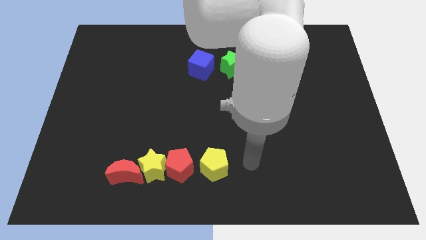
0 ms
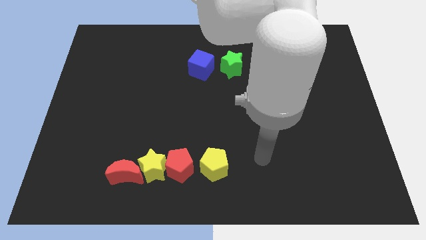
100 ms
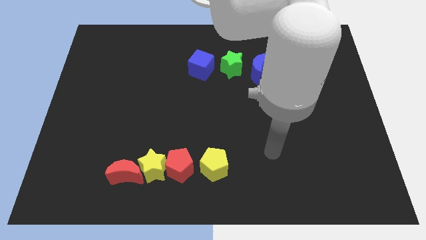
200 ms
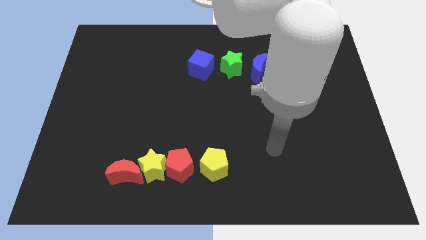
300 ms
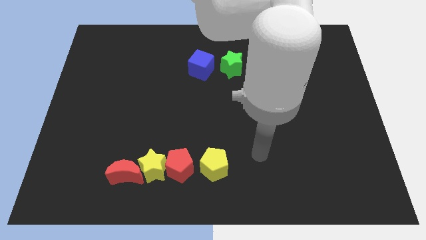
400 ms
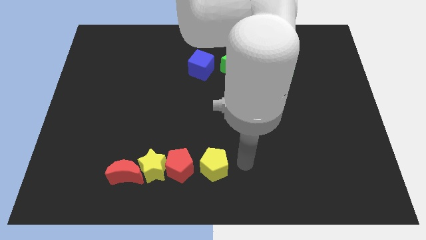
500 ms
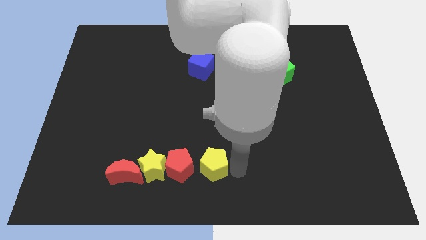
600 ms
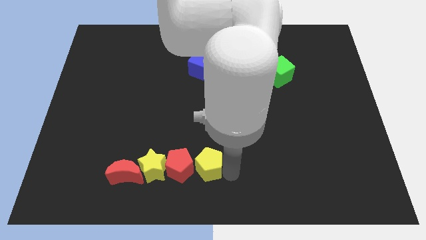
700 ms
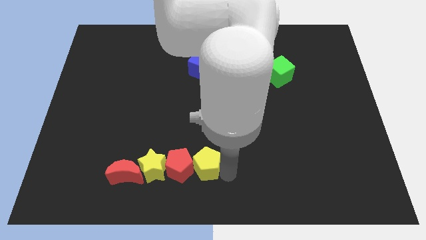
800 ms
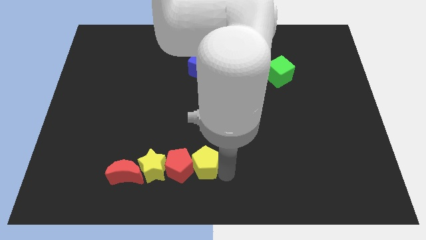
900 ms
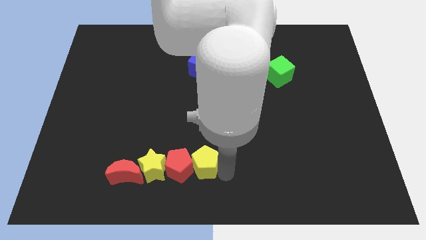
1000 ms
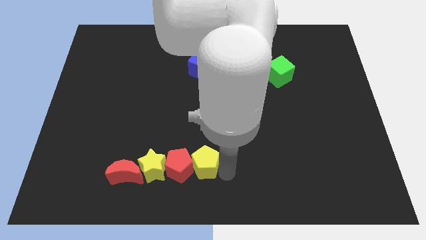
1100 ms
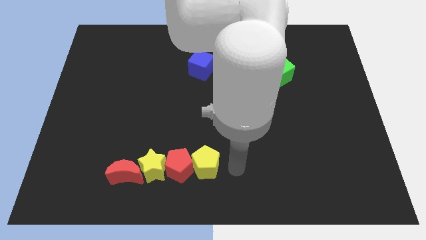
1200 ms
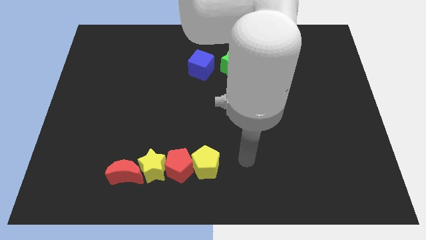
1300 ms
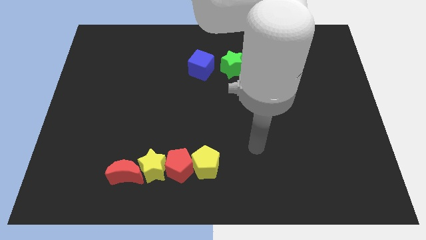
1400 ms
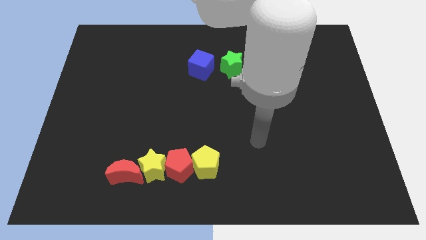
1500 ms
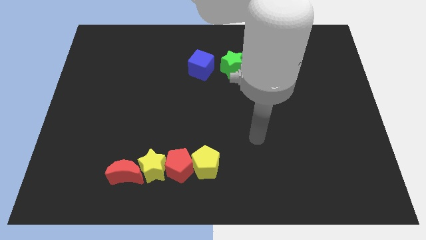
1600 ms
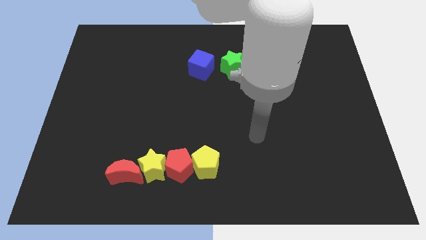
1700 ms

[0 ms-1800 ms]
move your arm away from the yellow pentagon

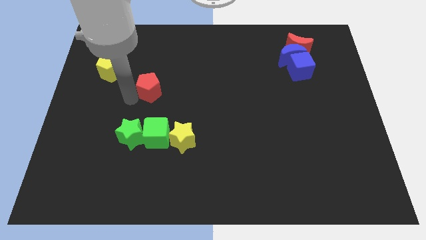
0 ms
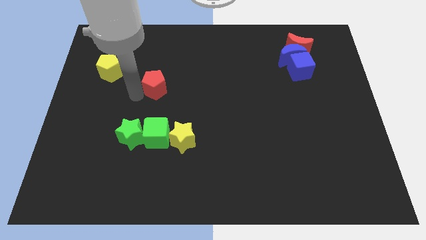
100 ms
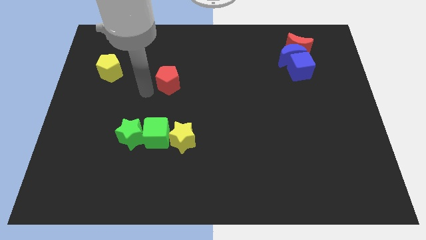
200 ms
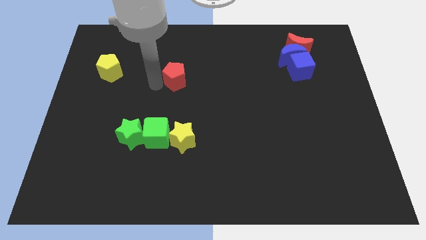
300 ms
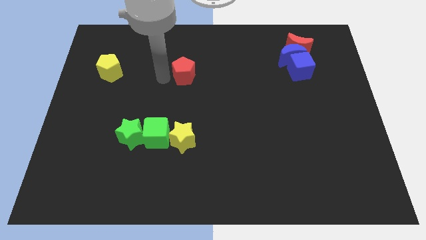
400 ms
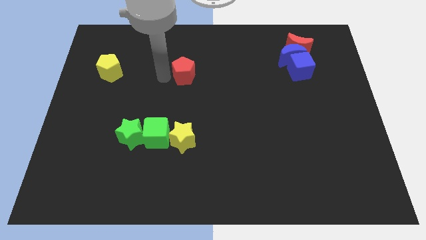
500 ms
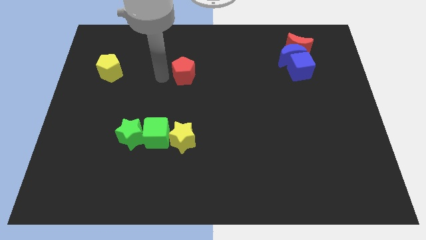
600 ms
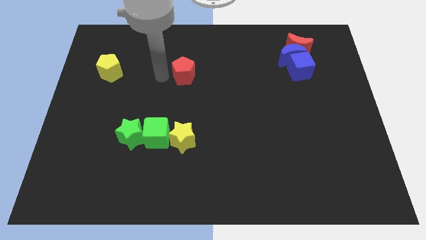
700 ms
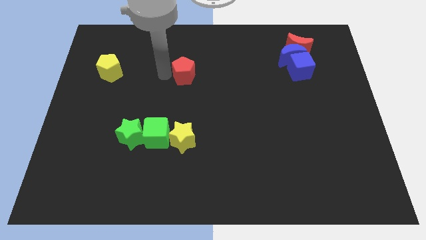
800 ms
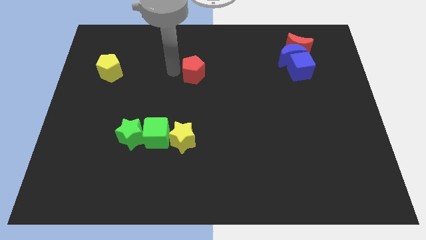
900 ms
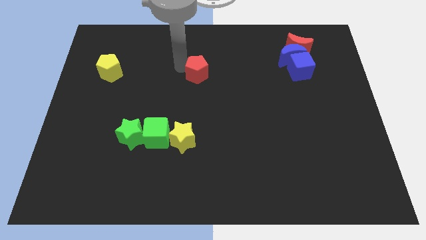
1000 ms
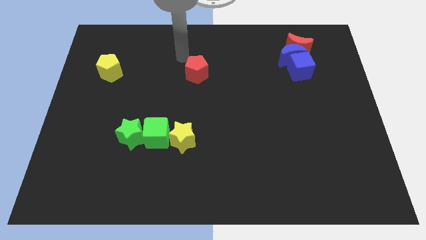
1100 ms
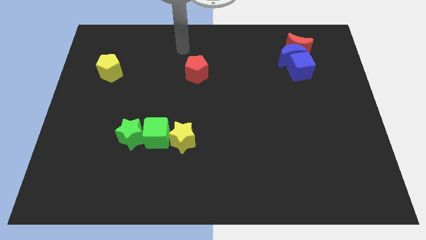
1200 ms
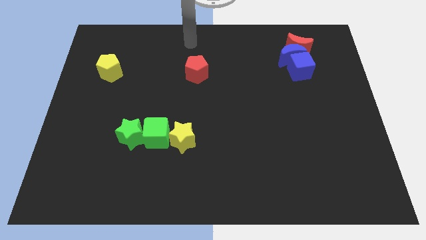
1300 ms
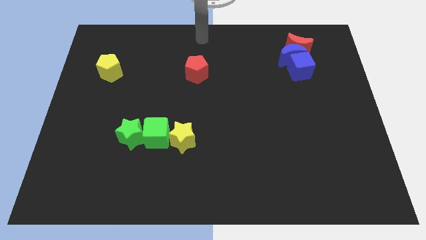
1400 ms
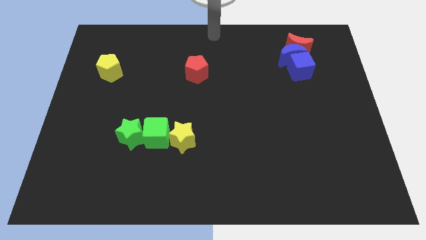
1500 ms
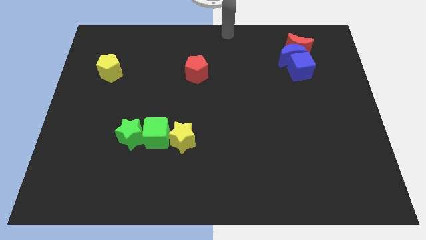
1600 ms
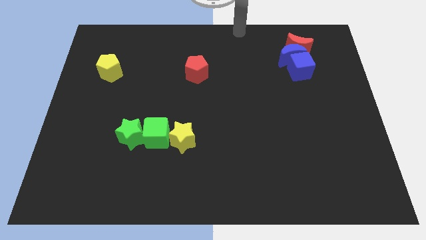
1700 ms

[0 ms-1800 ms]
push the red pentagon towards the top center of the board

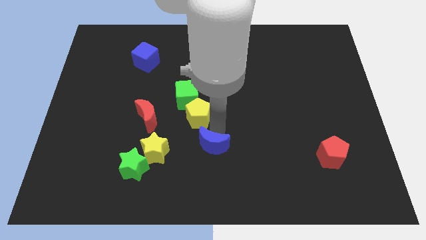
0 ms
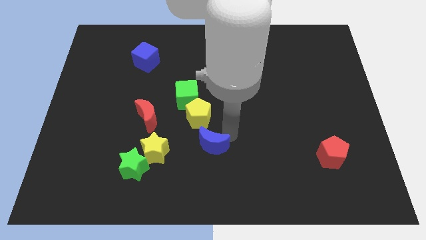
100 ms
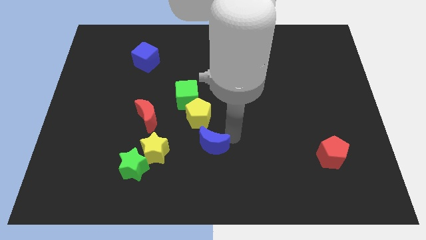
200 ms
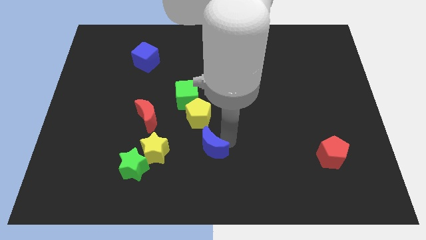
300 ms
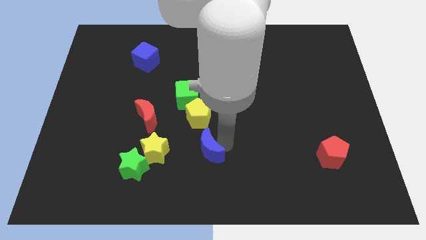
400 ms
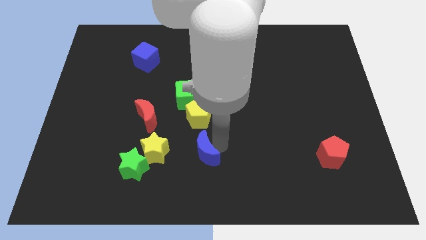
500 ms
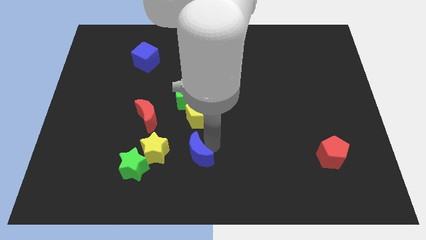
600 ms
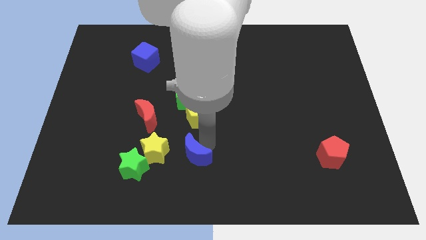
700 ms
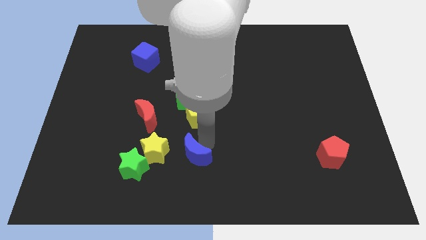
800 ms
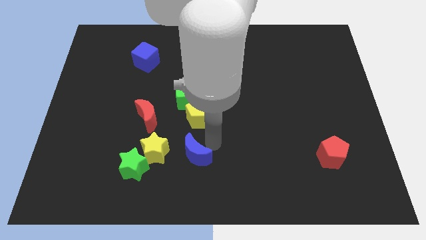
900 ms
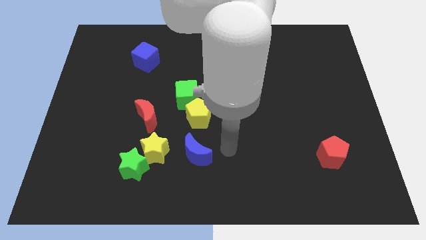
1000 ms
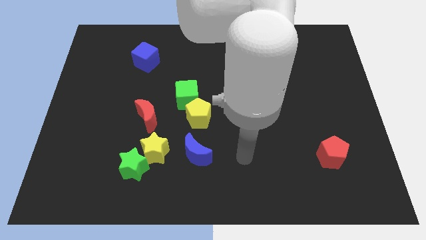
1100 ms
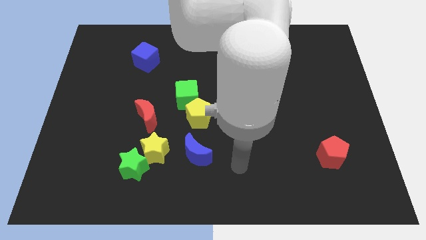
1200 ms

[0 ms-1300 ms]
move the blue crescent to the right of the yellow star

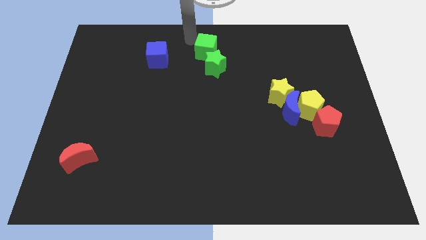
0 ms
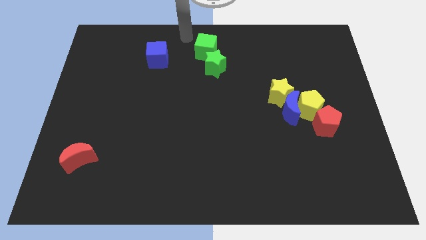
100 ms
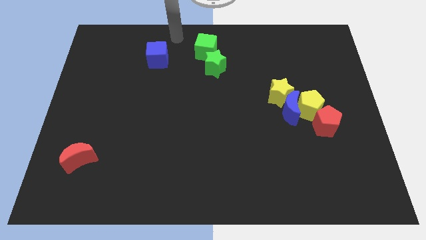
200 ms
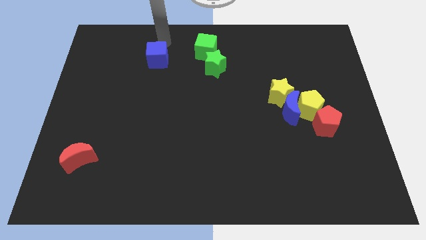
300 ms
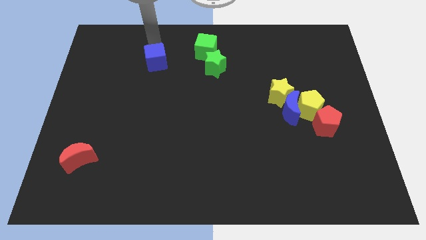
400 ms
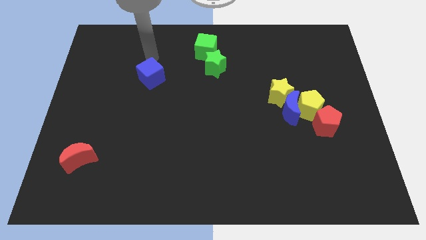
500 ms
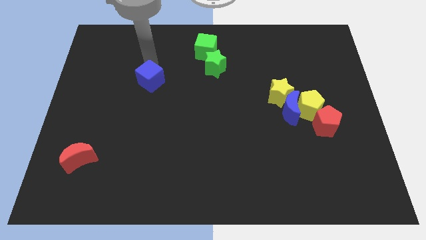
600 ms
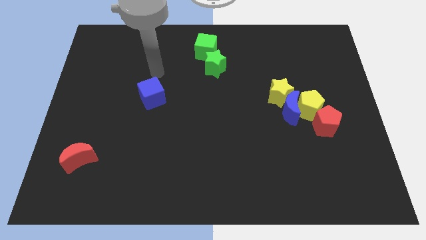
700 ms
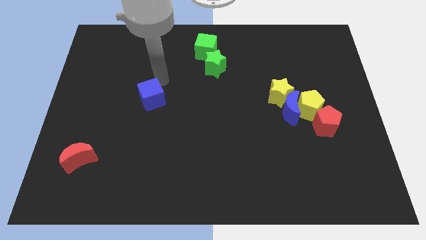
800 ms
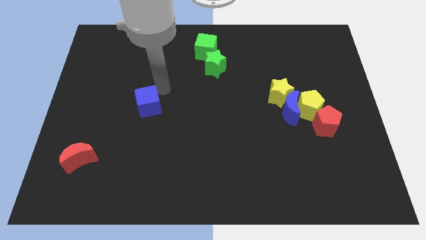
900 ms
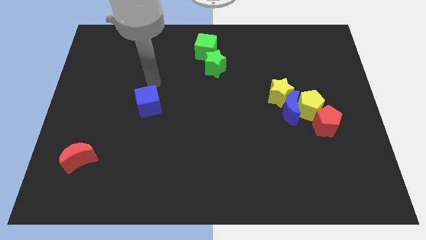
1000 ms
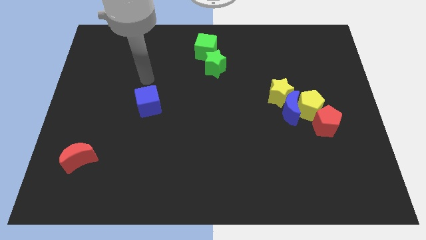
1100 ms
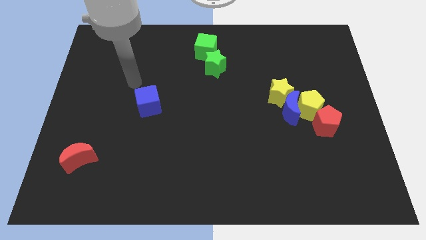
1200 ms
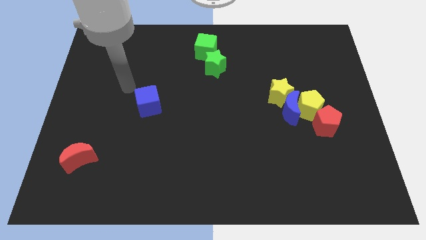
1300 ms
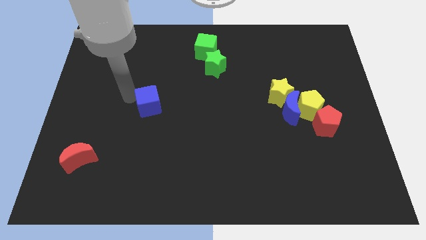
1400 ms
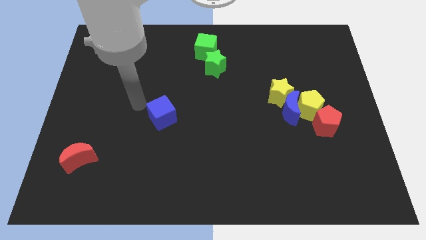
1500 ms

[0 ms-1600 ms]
drag the blue cube towards the bottom side

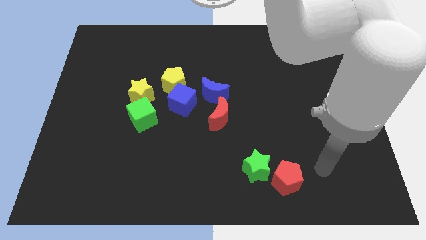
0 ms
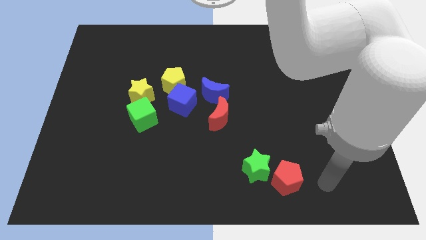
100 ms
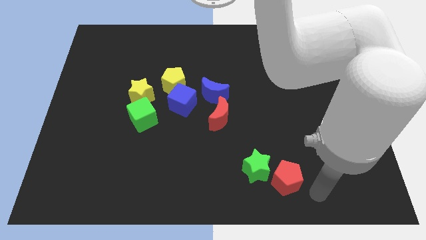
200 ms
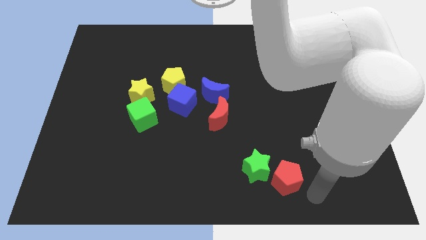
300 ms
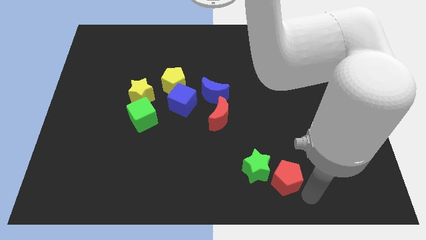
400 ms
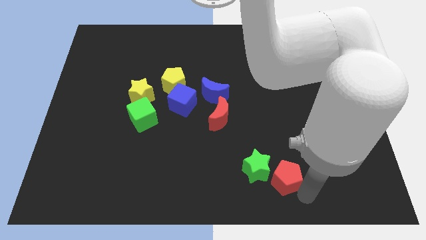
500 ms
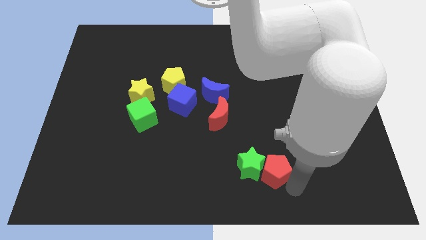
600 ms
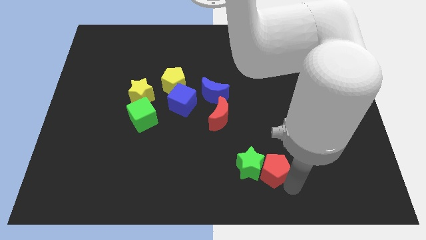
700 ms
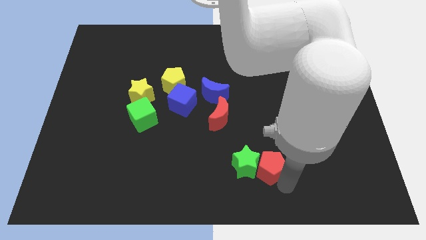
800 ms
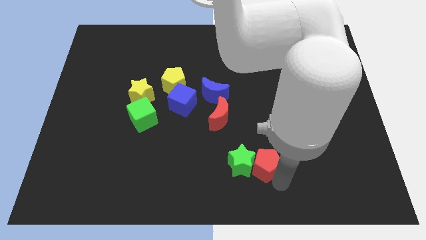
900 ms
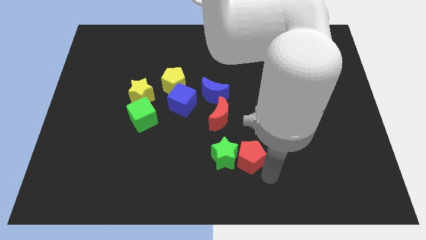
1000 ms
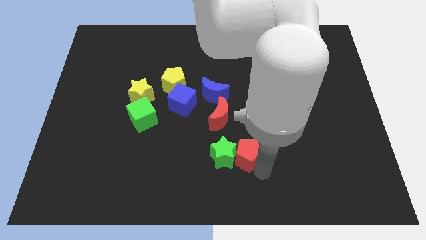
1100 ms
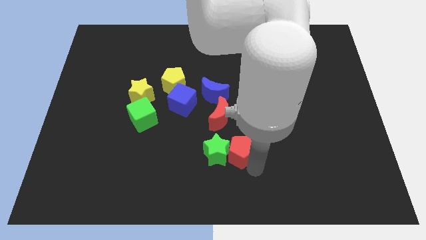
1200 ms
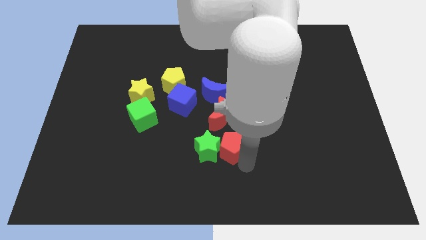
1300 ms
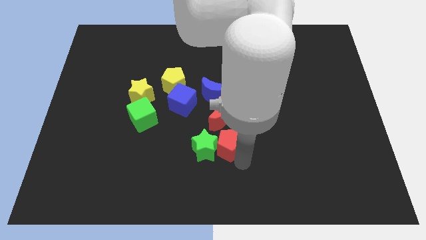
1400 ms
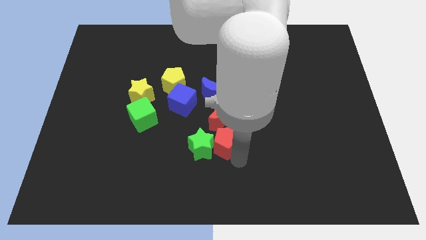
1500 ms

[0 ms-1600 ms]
push the red pentagon and green star towards the center

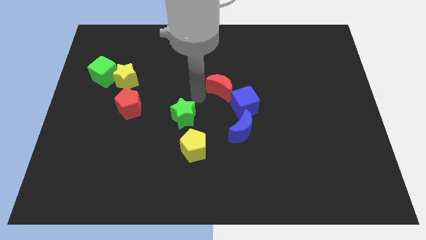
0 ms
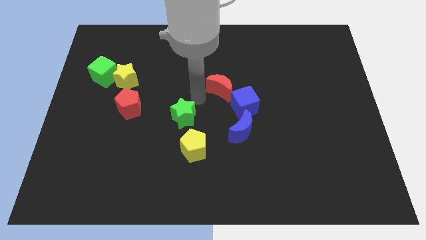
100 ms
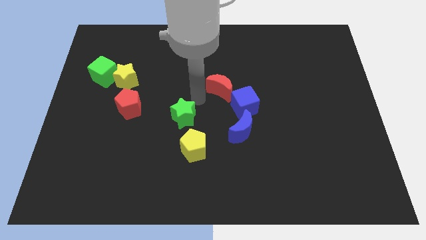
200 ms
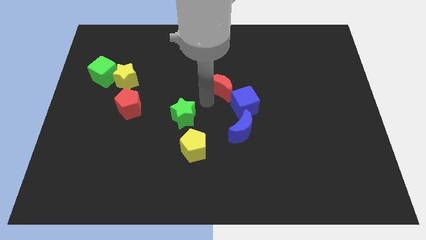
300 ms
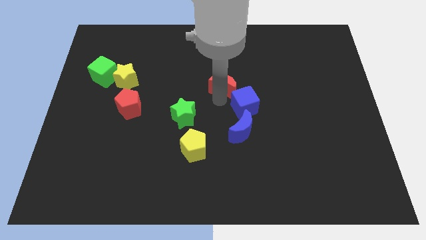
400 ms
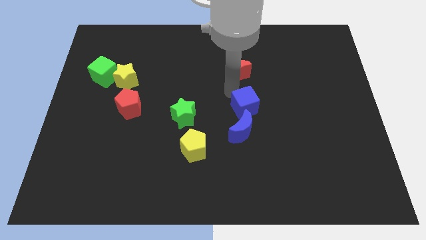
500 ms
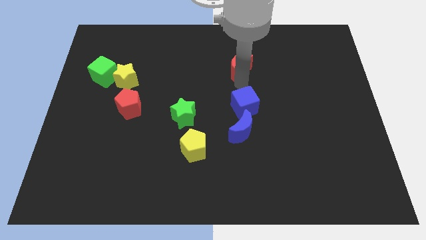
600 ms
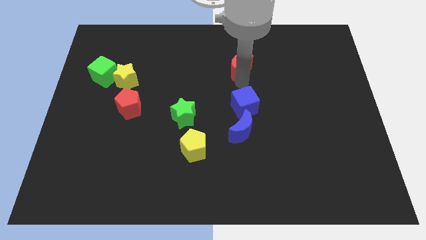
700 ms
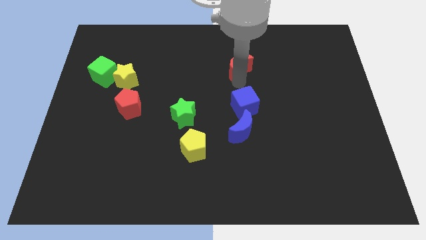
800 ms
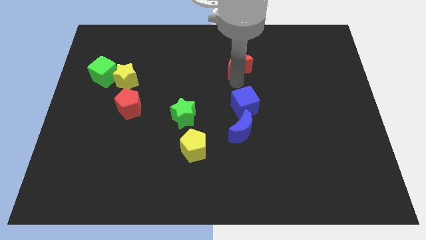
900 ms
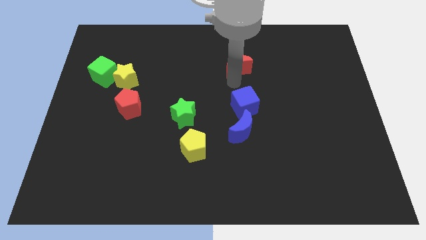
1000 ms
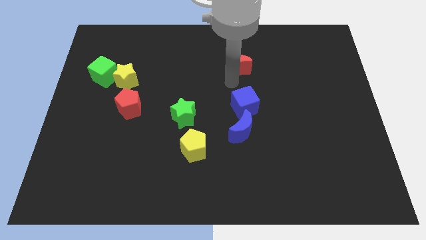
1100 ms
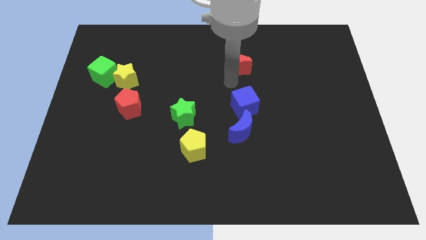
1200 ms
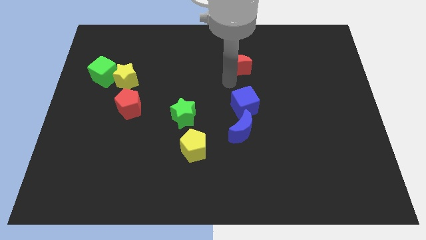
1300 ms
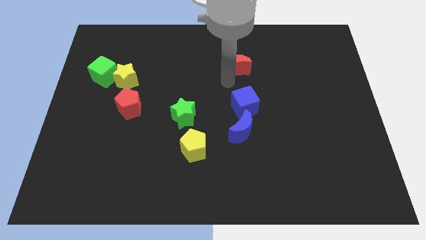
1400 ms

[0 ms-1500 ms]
place the red moon at the top of the blue cube
